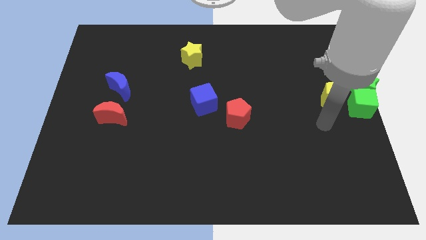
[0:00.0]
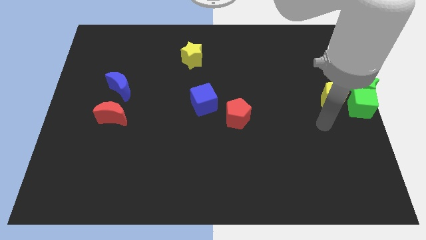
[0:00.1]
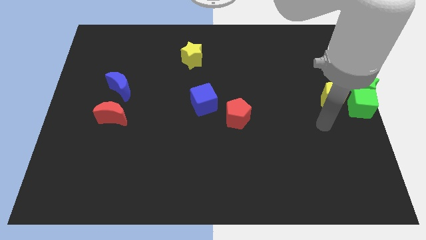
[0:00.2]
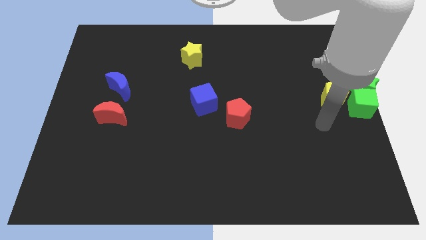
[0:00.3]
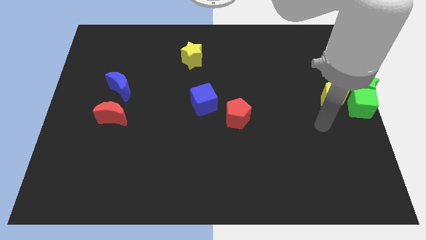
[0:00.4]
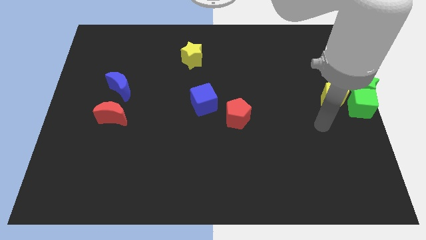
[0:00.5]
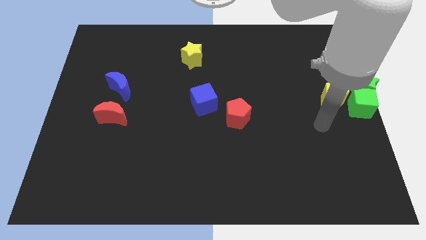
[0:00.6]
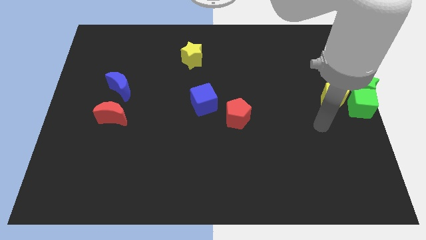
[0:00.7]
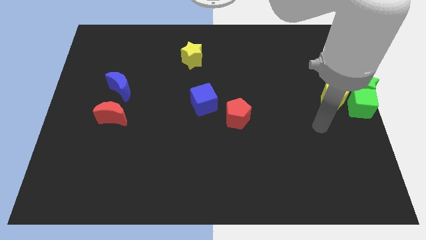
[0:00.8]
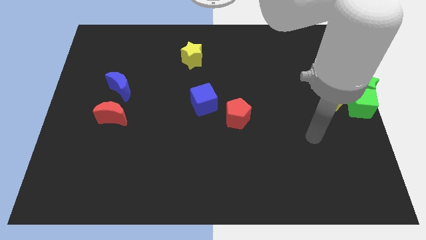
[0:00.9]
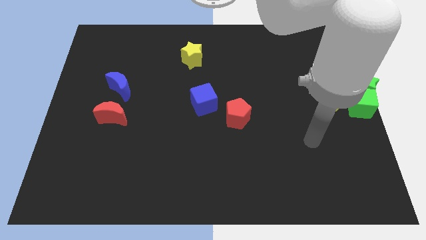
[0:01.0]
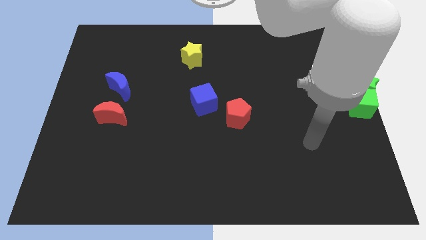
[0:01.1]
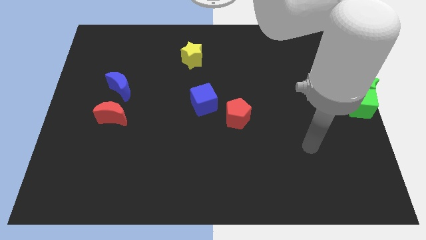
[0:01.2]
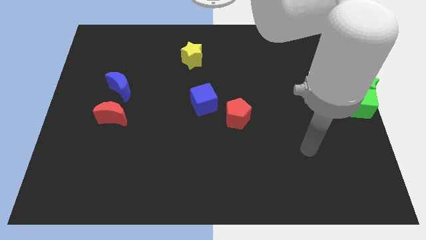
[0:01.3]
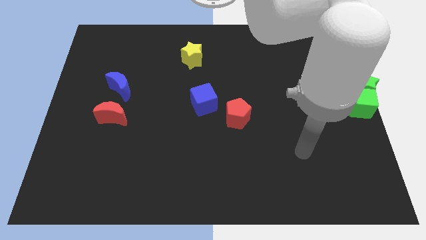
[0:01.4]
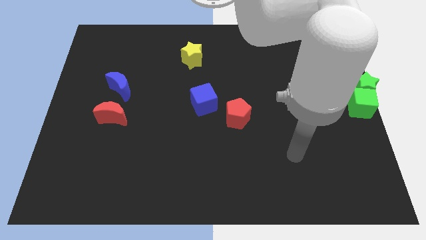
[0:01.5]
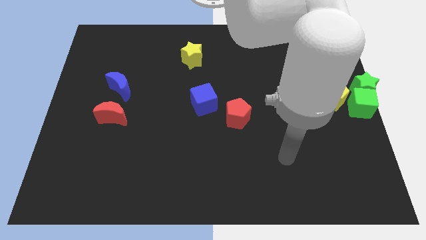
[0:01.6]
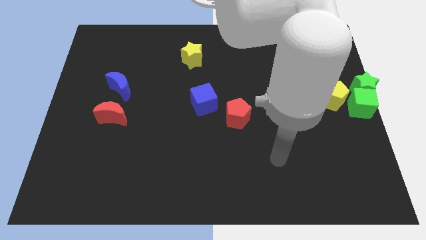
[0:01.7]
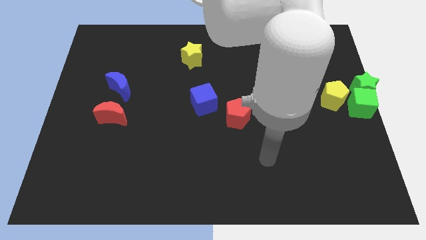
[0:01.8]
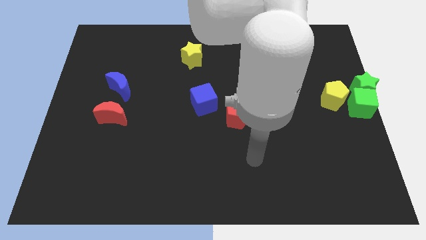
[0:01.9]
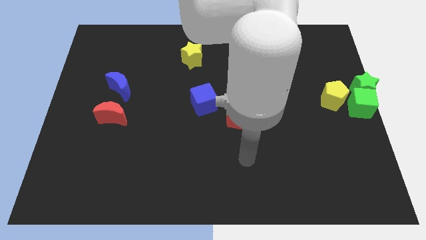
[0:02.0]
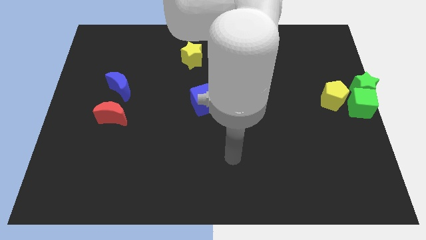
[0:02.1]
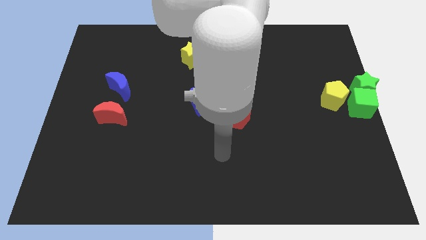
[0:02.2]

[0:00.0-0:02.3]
point your arm at the bottom of red pentagon

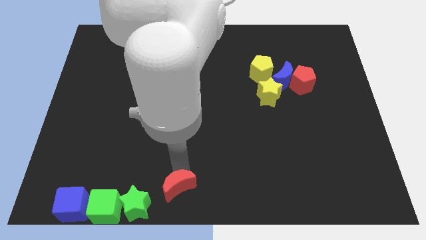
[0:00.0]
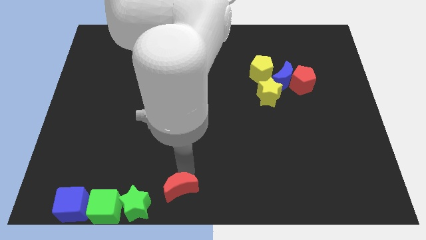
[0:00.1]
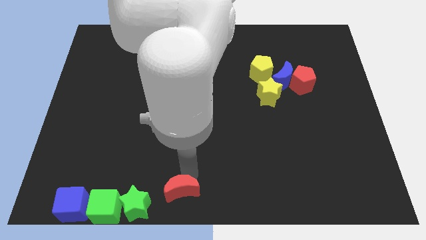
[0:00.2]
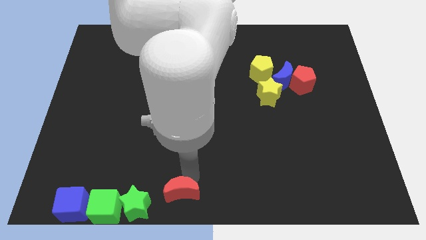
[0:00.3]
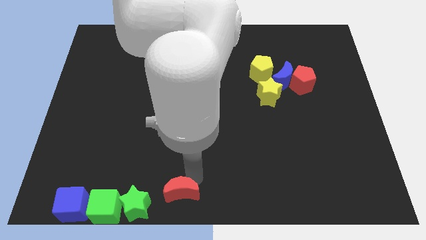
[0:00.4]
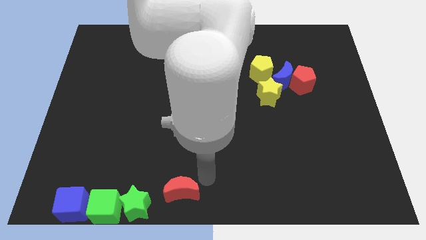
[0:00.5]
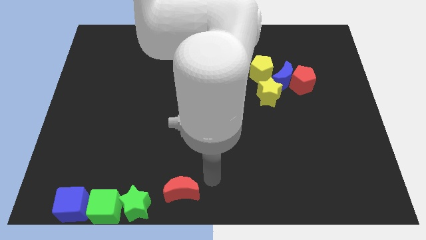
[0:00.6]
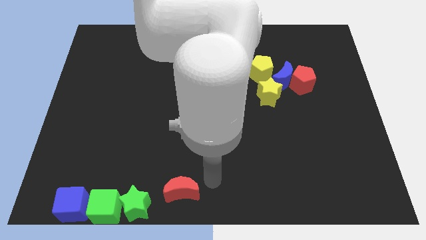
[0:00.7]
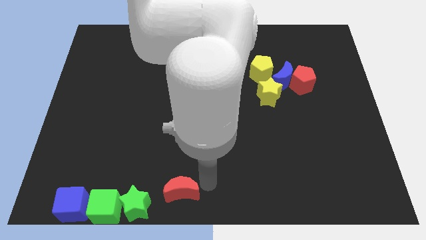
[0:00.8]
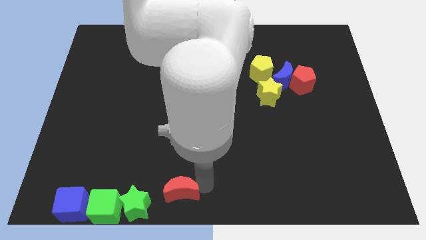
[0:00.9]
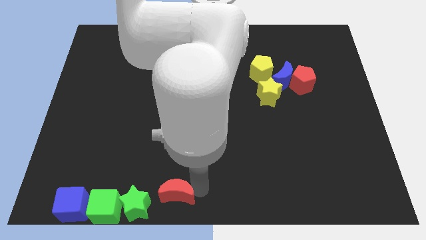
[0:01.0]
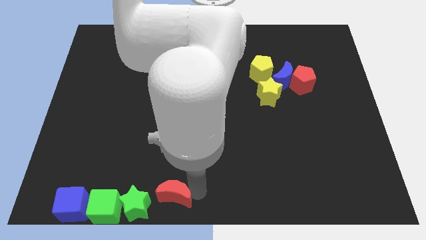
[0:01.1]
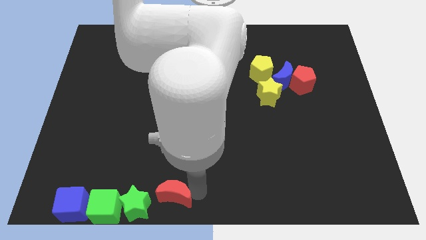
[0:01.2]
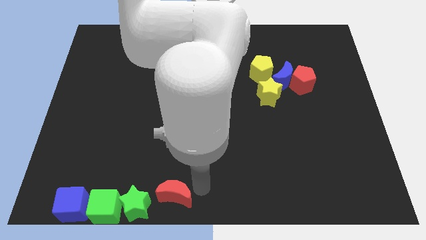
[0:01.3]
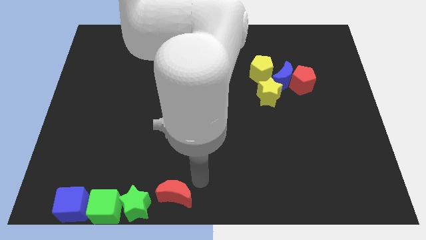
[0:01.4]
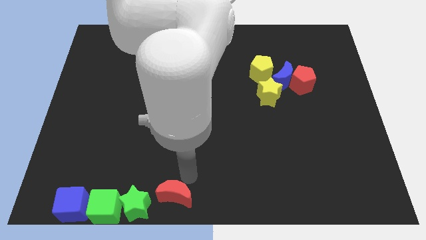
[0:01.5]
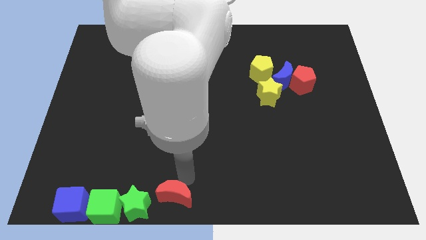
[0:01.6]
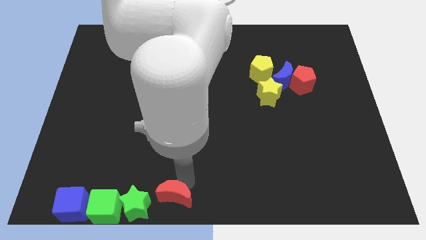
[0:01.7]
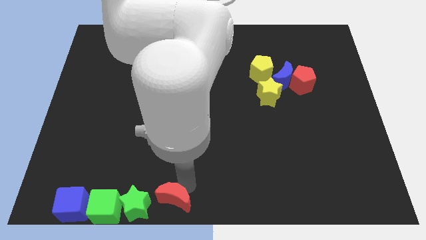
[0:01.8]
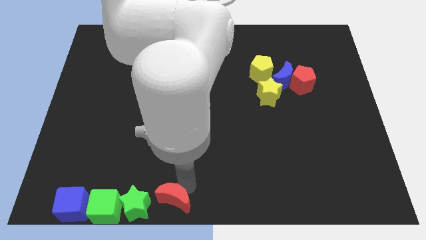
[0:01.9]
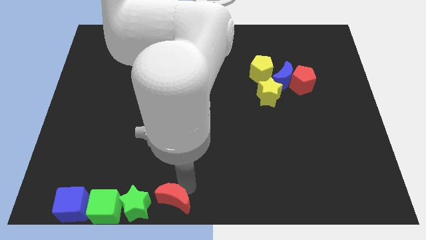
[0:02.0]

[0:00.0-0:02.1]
push the red crescent to the right of the green star

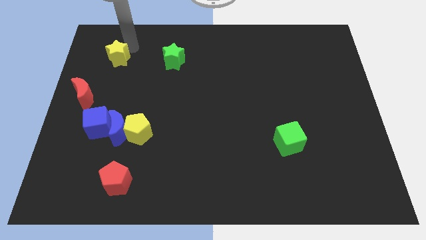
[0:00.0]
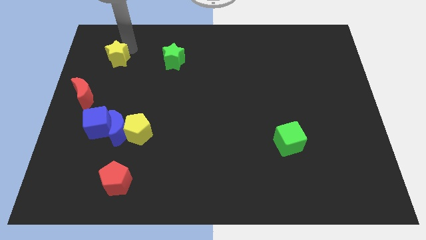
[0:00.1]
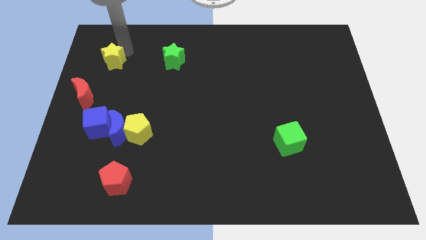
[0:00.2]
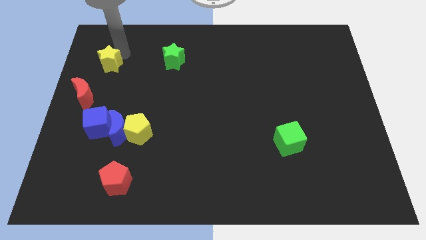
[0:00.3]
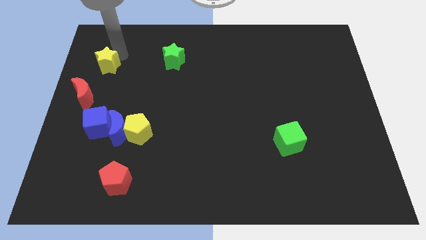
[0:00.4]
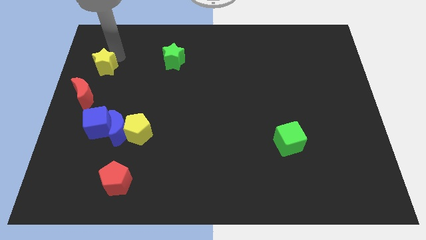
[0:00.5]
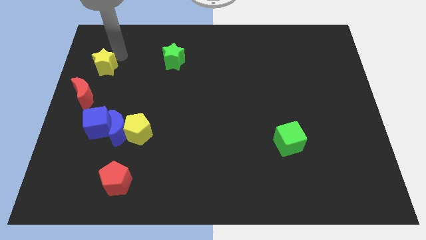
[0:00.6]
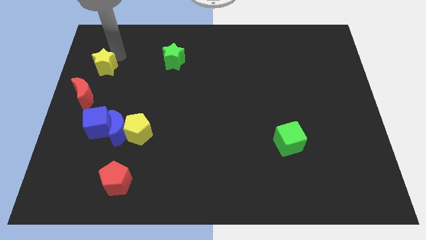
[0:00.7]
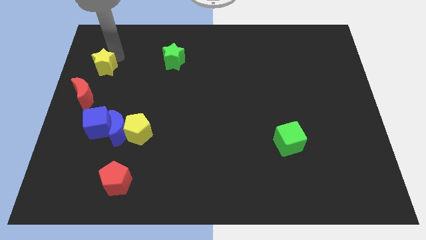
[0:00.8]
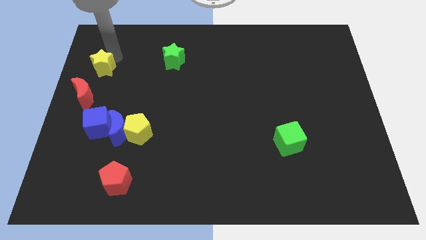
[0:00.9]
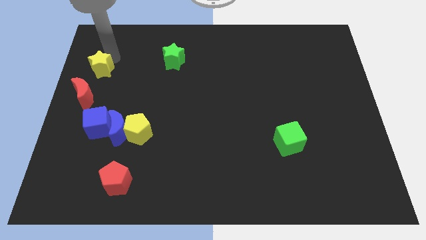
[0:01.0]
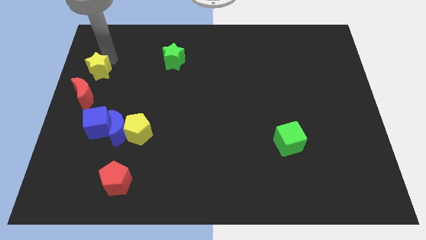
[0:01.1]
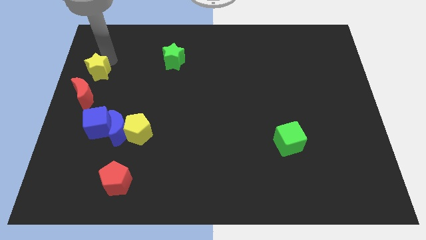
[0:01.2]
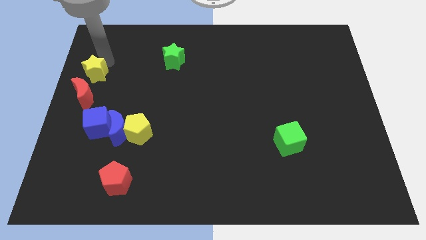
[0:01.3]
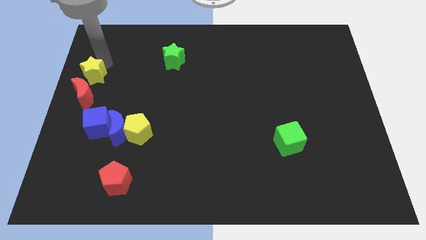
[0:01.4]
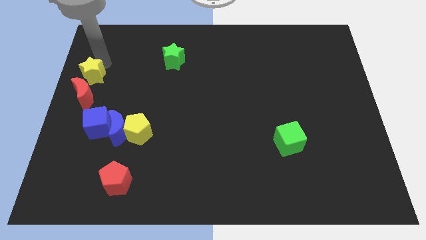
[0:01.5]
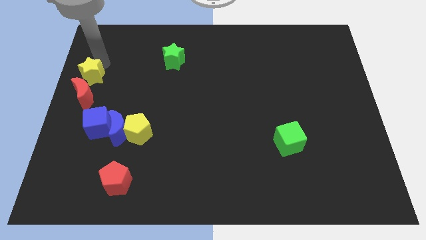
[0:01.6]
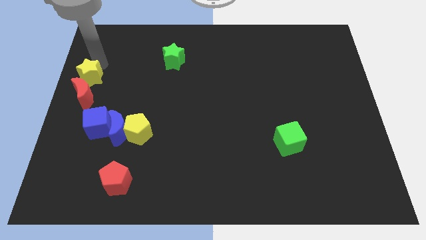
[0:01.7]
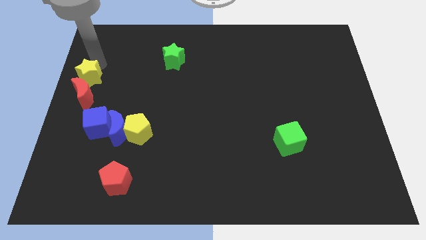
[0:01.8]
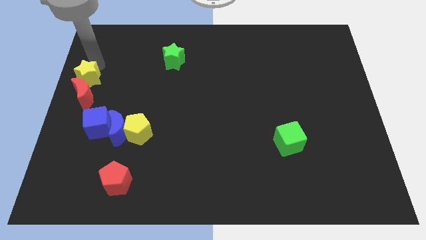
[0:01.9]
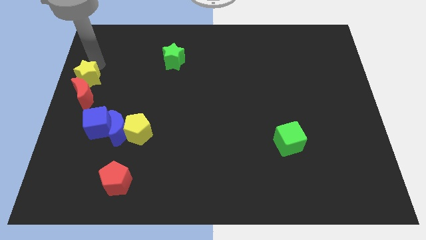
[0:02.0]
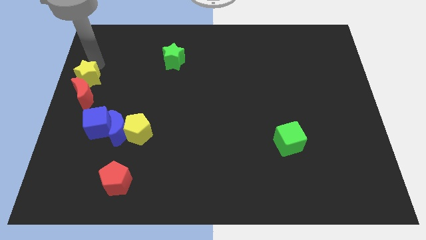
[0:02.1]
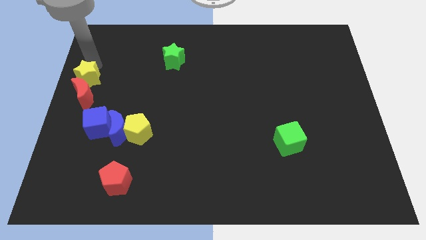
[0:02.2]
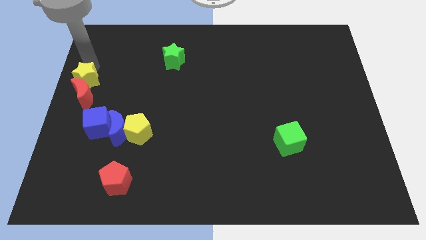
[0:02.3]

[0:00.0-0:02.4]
place yellow star above red crescent

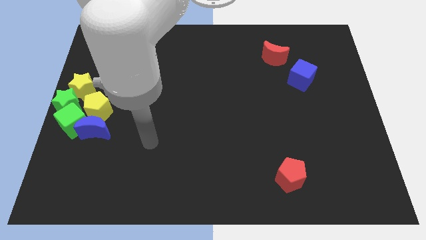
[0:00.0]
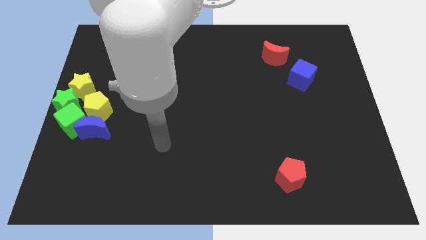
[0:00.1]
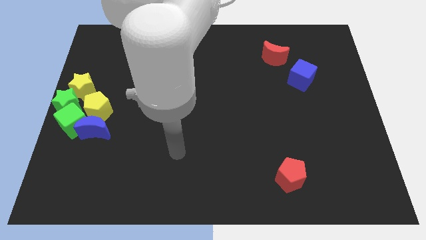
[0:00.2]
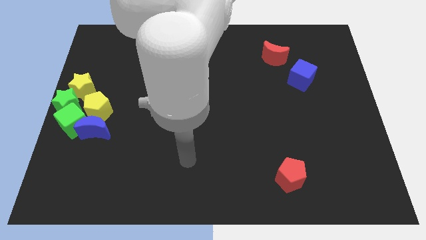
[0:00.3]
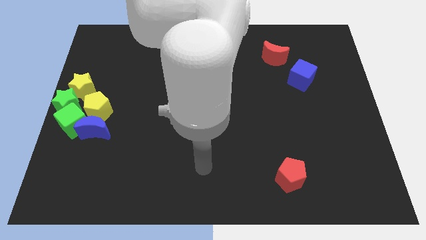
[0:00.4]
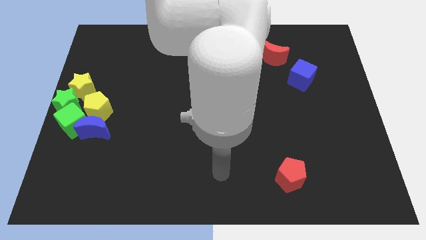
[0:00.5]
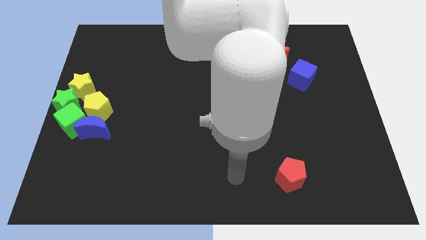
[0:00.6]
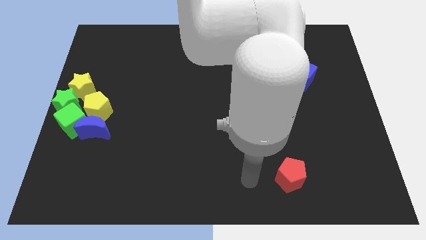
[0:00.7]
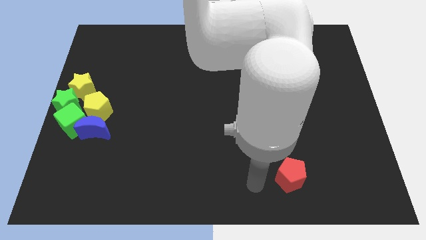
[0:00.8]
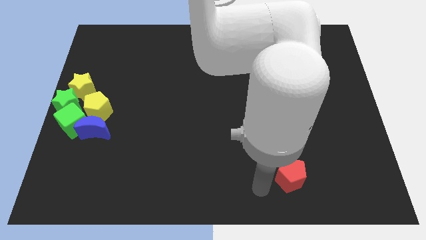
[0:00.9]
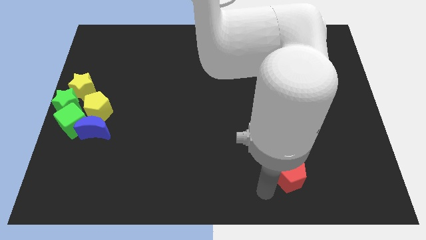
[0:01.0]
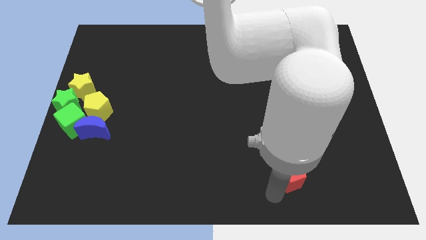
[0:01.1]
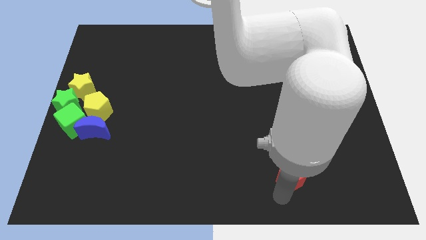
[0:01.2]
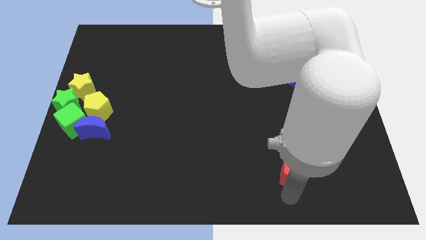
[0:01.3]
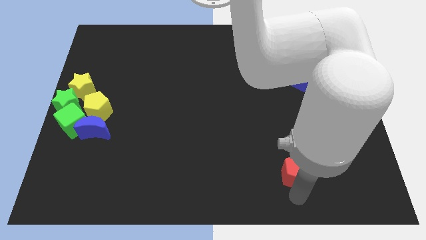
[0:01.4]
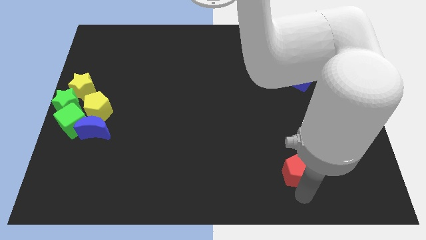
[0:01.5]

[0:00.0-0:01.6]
tap the red pentagon

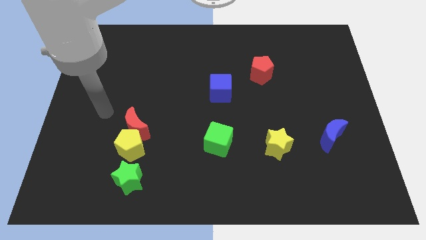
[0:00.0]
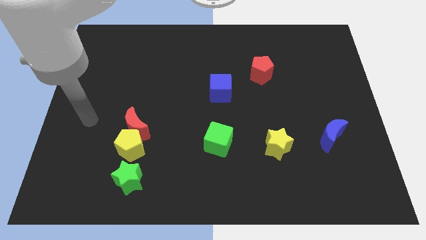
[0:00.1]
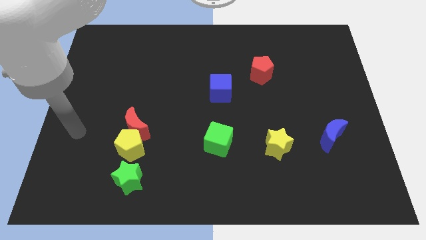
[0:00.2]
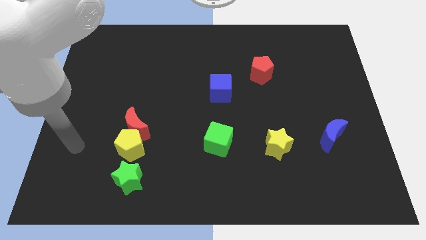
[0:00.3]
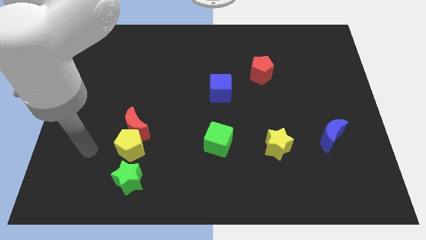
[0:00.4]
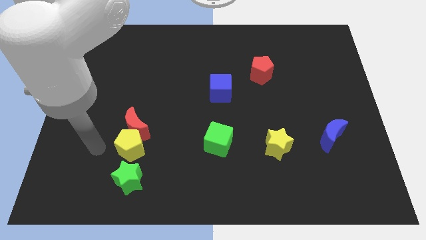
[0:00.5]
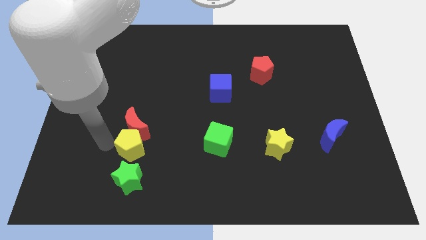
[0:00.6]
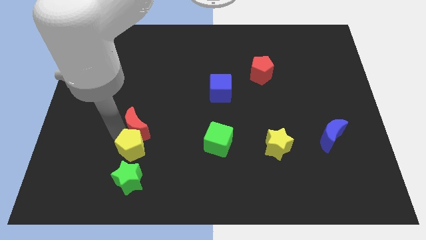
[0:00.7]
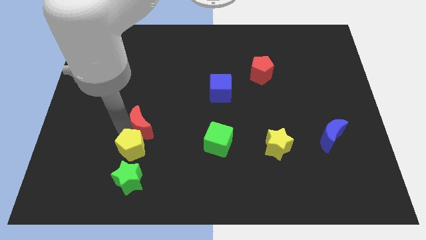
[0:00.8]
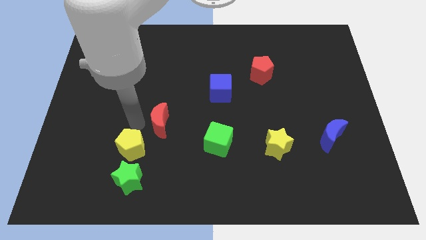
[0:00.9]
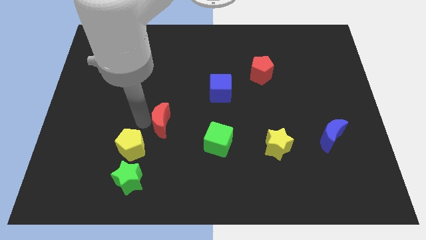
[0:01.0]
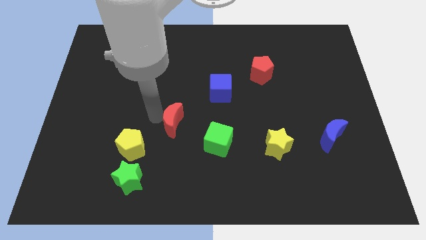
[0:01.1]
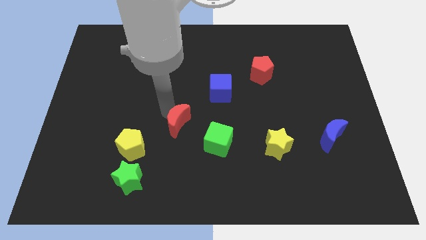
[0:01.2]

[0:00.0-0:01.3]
separate red crescent from the yellow pentagon
